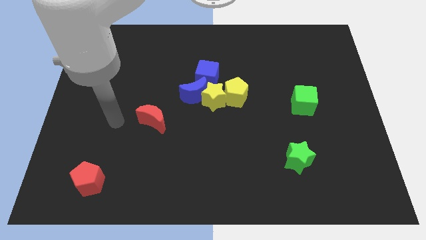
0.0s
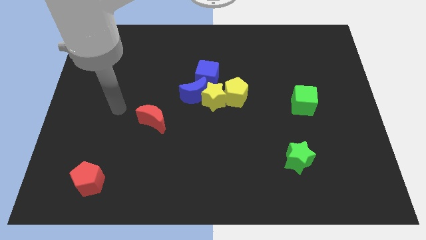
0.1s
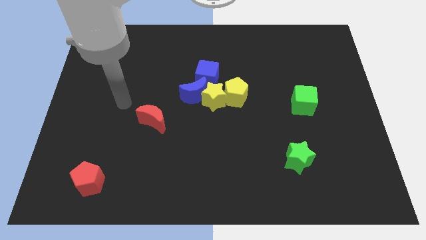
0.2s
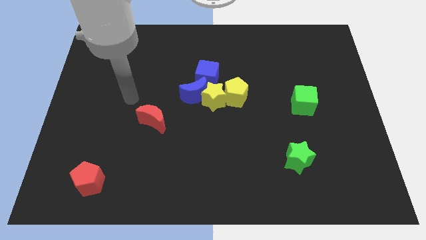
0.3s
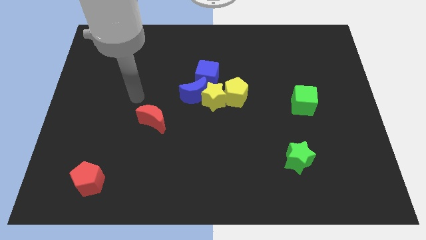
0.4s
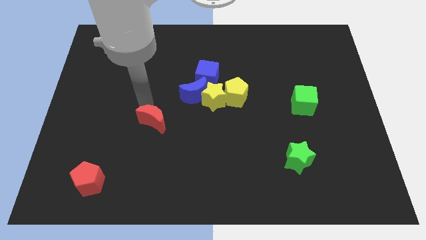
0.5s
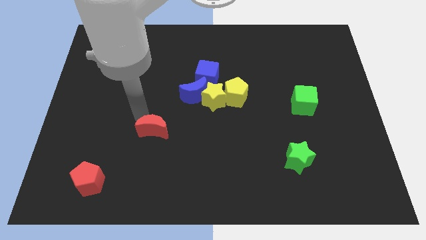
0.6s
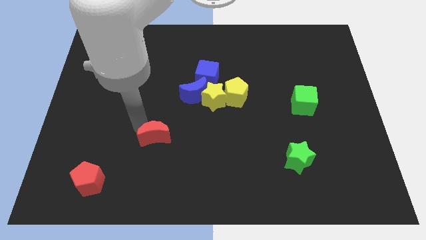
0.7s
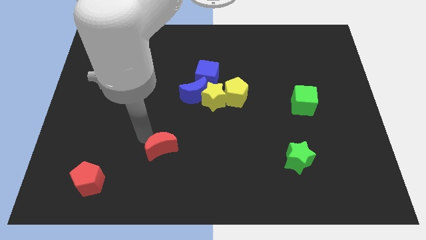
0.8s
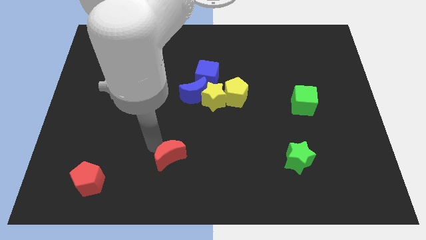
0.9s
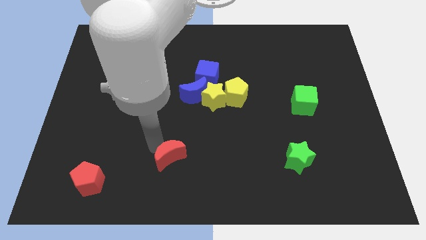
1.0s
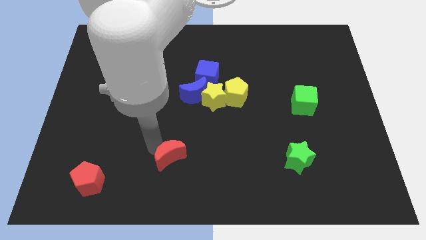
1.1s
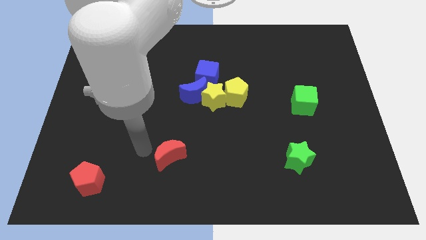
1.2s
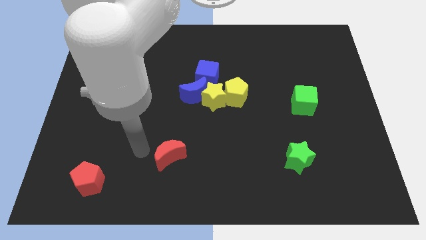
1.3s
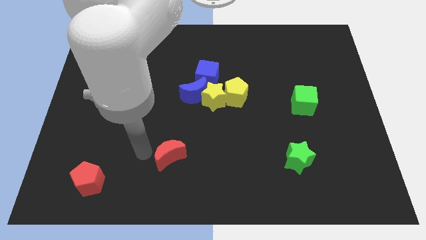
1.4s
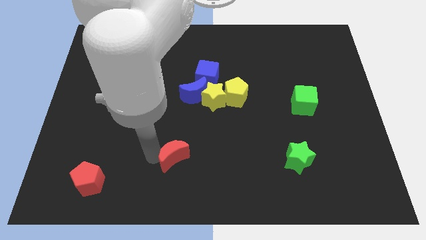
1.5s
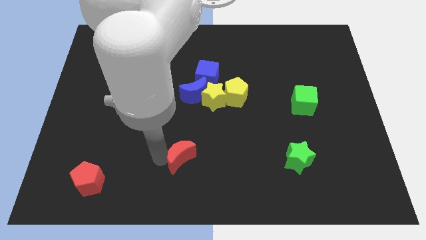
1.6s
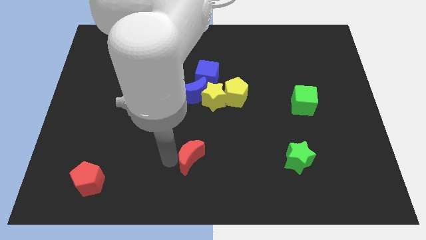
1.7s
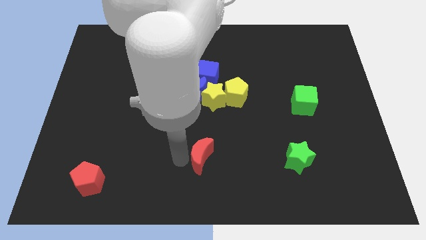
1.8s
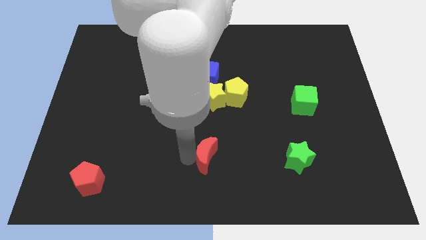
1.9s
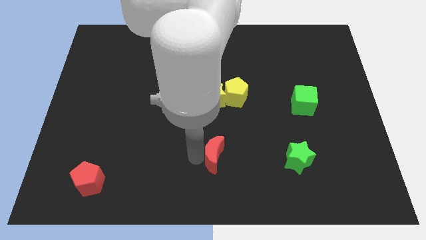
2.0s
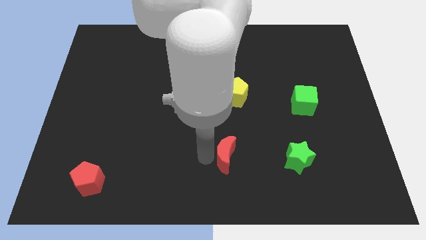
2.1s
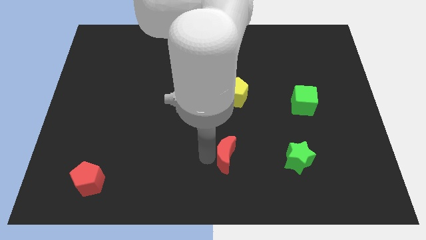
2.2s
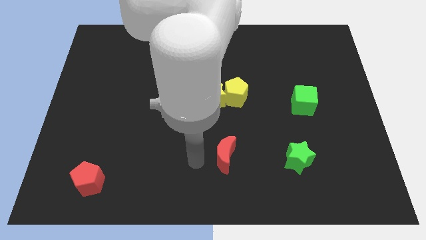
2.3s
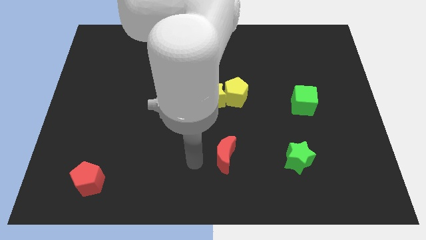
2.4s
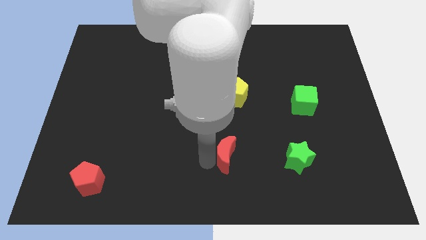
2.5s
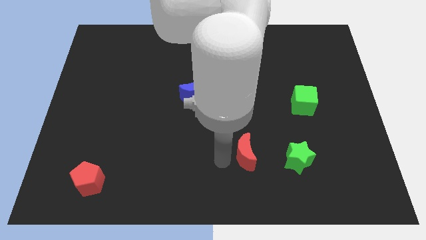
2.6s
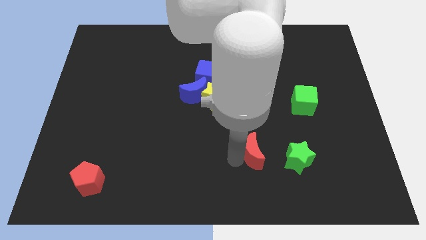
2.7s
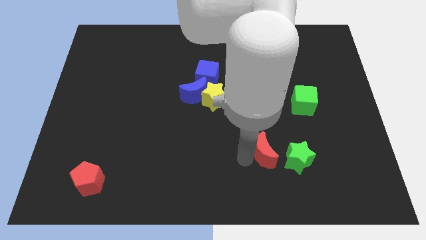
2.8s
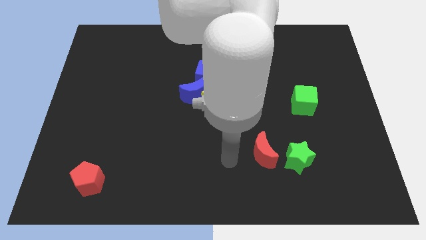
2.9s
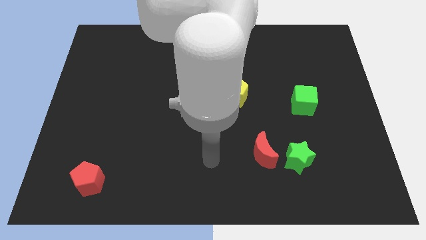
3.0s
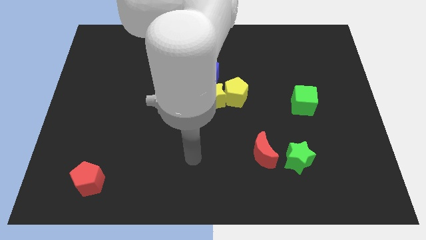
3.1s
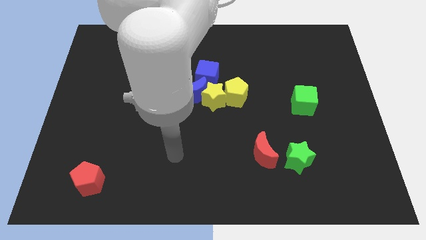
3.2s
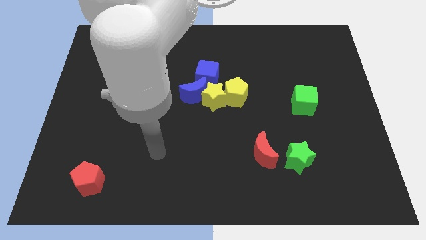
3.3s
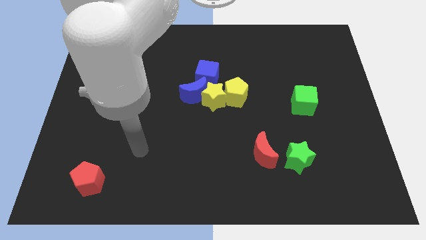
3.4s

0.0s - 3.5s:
move the red crescent to the left of the green star

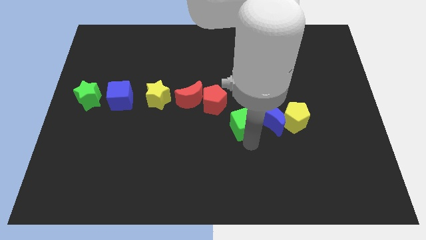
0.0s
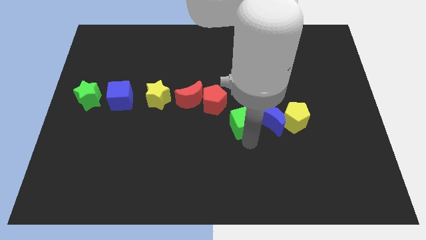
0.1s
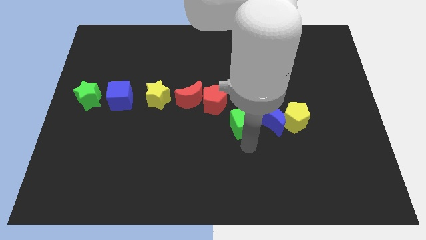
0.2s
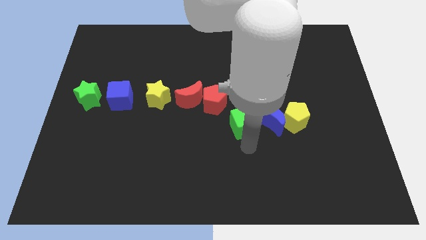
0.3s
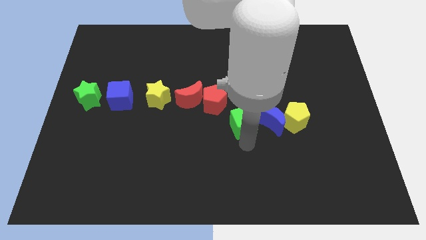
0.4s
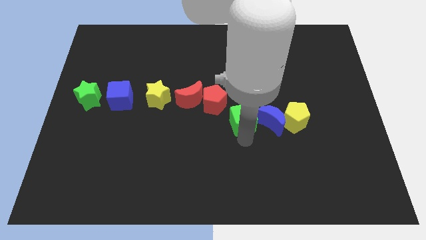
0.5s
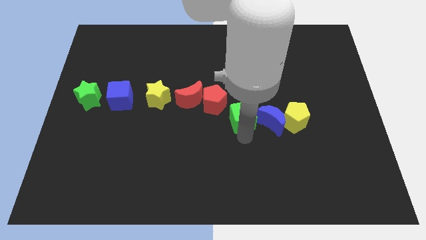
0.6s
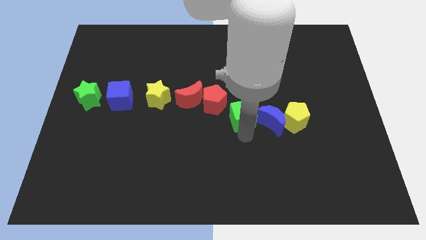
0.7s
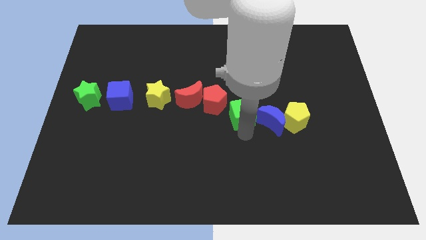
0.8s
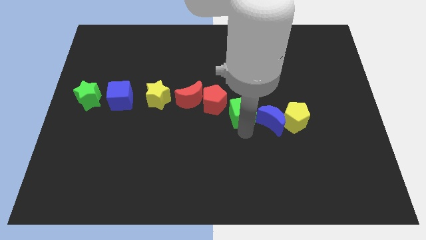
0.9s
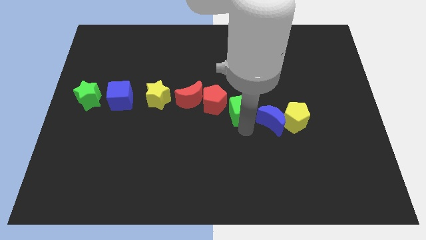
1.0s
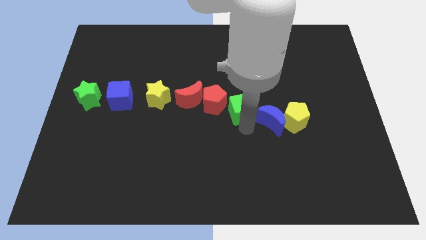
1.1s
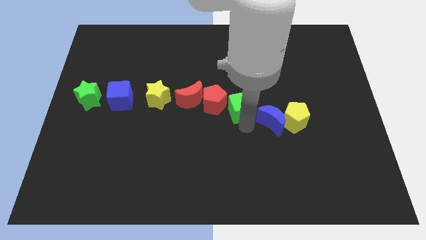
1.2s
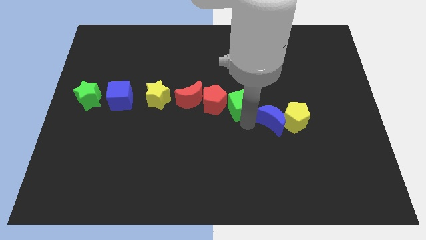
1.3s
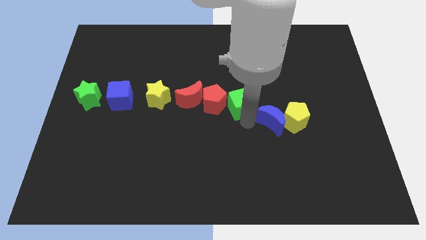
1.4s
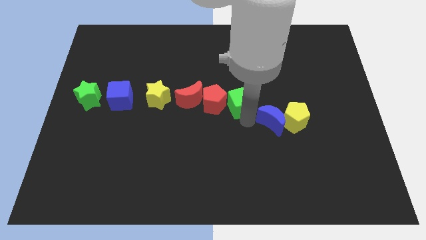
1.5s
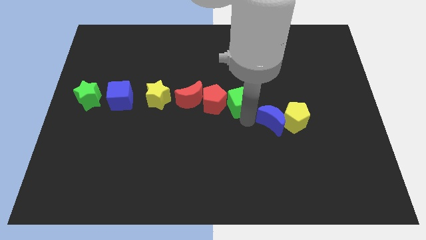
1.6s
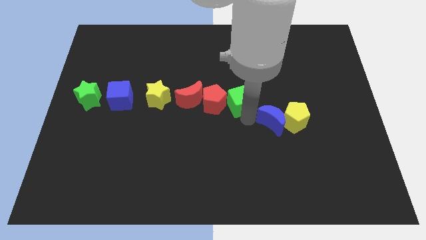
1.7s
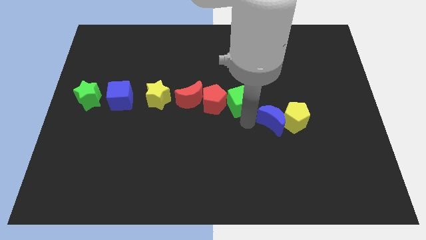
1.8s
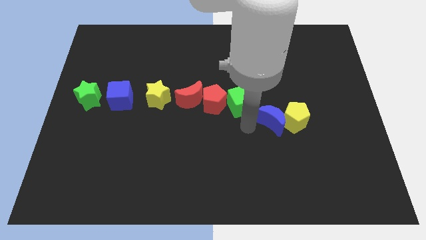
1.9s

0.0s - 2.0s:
push the green cube to the right side of the red pentagon

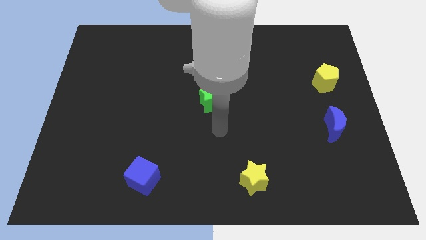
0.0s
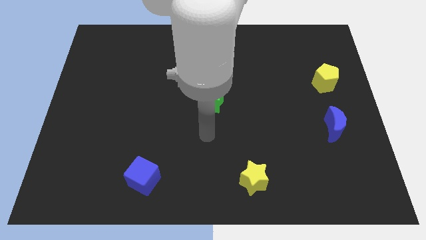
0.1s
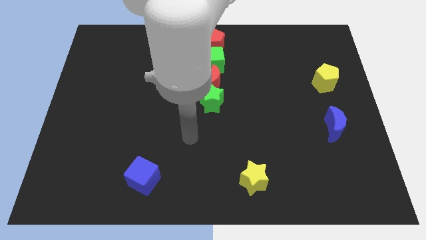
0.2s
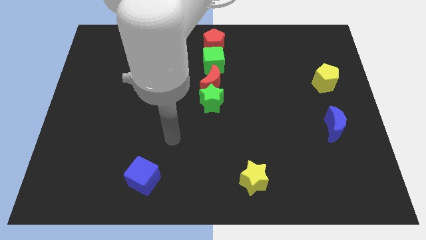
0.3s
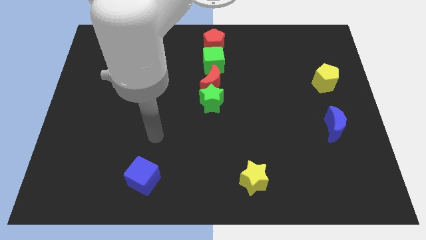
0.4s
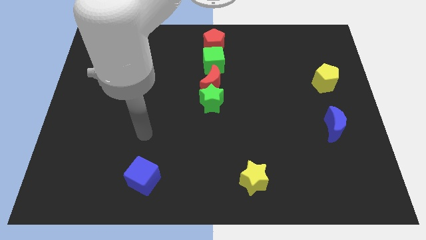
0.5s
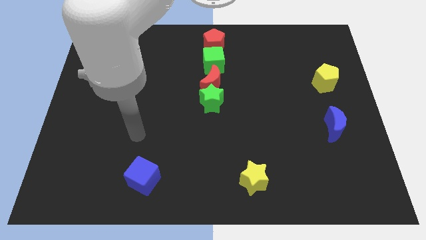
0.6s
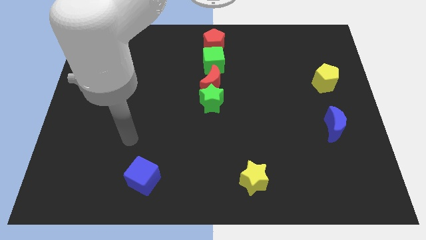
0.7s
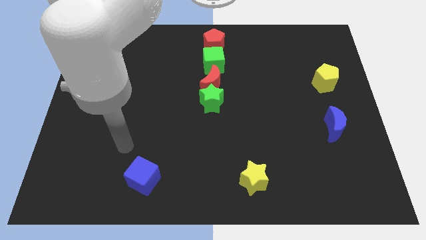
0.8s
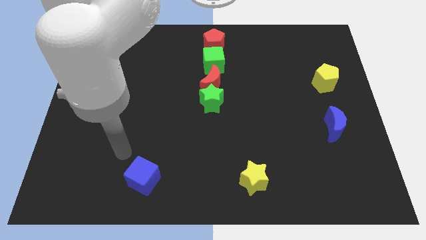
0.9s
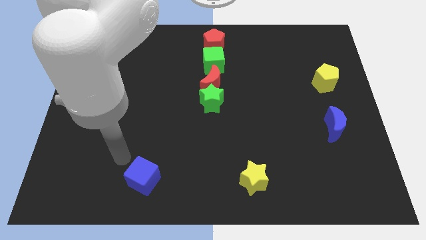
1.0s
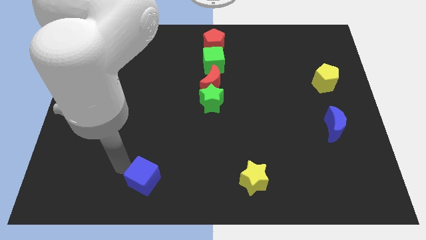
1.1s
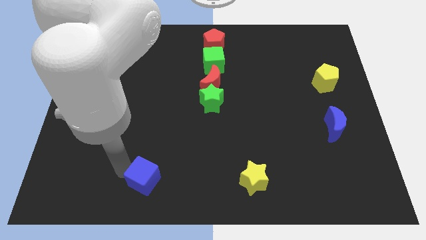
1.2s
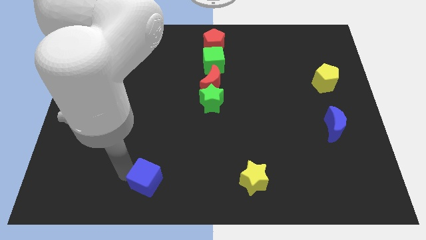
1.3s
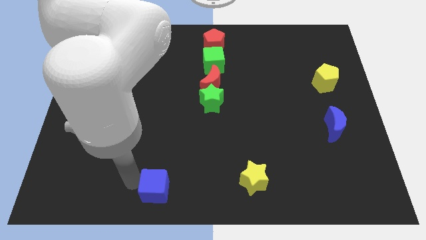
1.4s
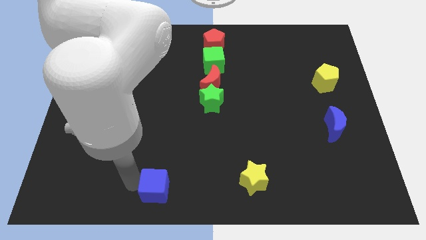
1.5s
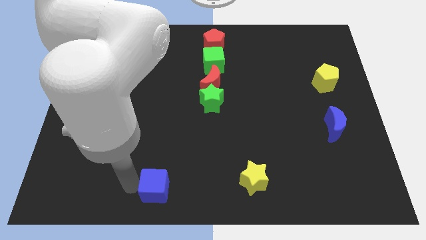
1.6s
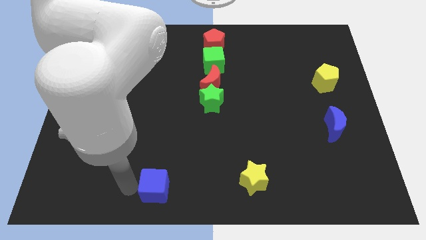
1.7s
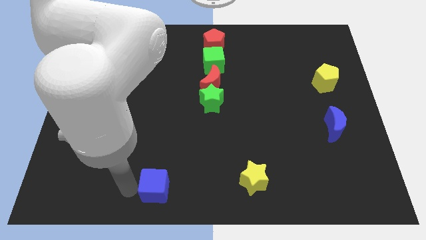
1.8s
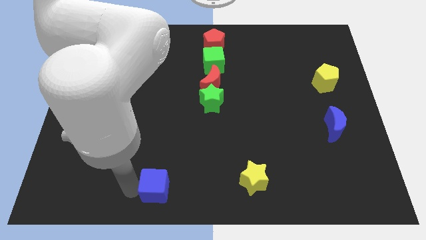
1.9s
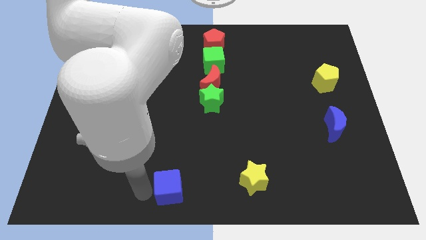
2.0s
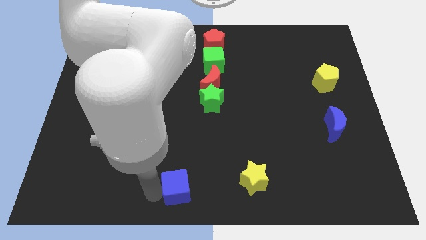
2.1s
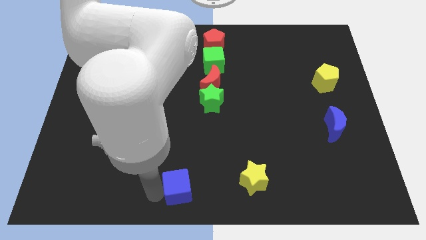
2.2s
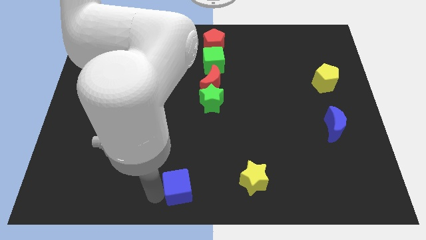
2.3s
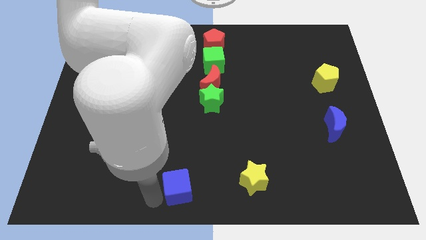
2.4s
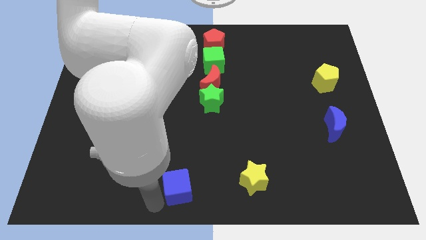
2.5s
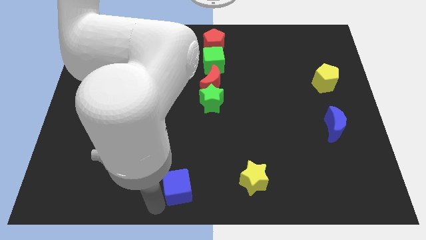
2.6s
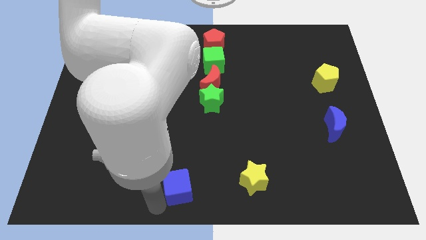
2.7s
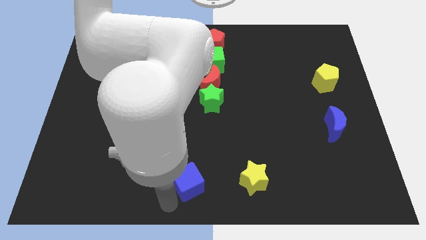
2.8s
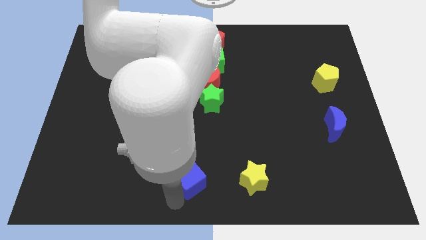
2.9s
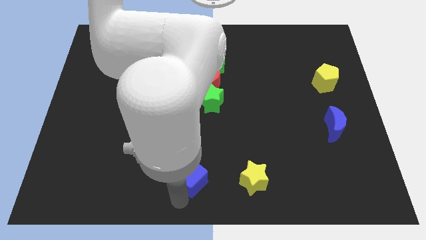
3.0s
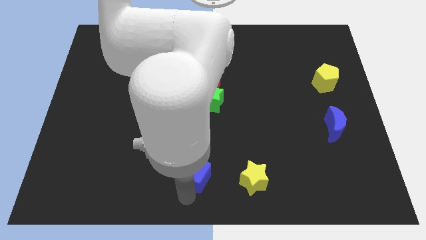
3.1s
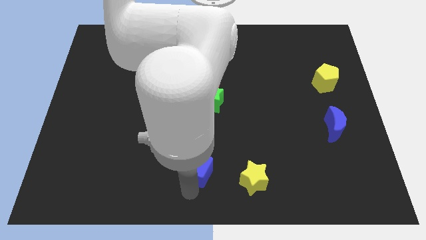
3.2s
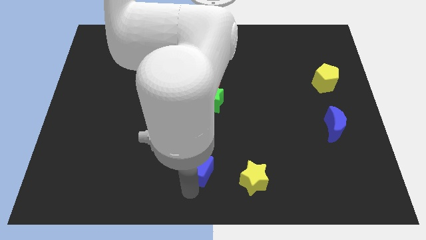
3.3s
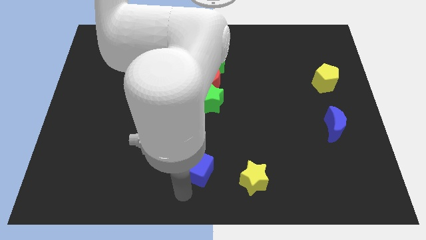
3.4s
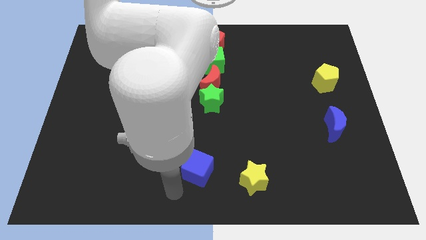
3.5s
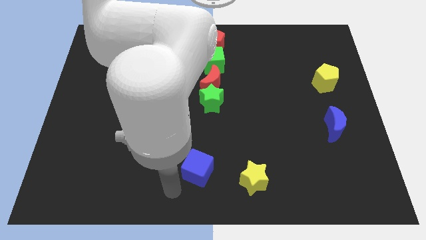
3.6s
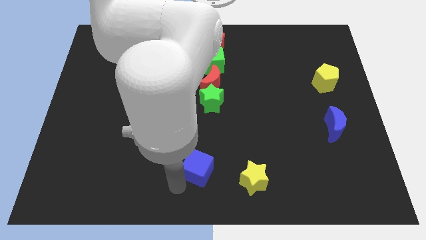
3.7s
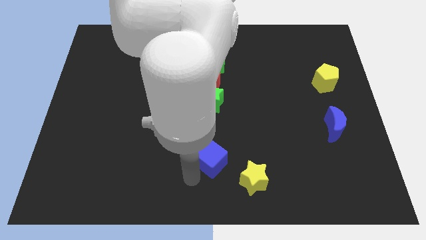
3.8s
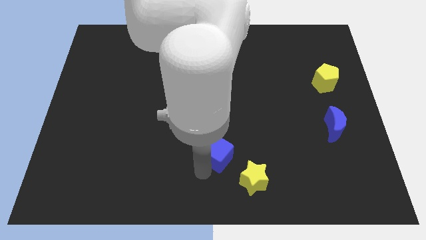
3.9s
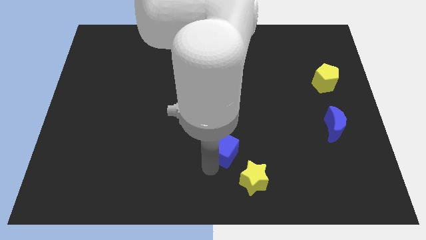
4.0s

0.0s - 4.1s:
move the blue cube to the top left of the yellow star
